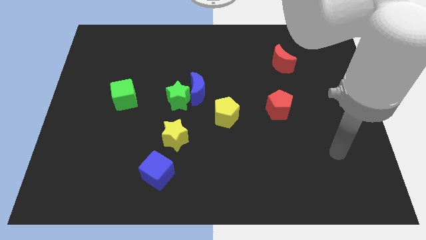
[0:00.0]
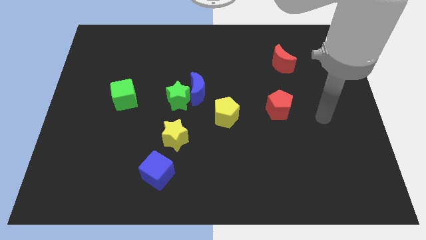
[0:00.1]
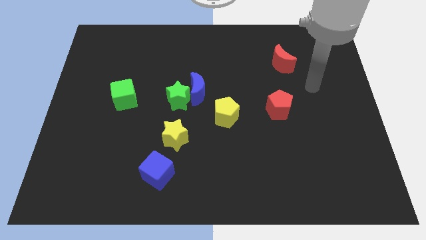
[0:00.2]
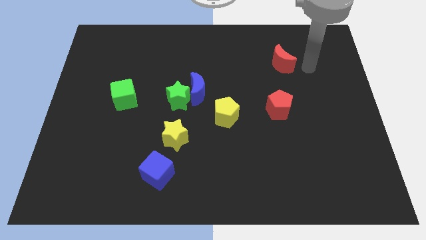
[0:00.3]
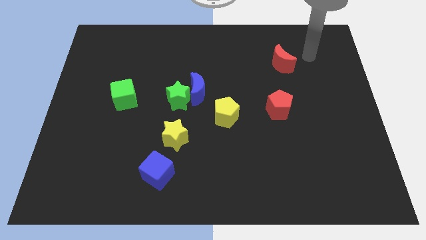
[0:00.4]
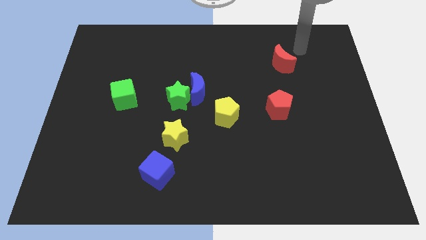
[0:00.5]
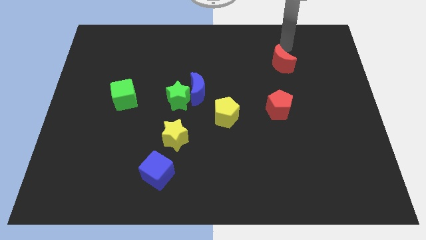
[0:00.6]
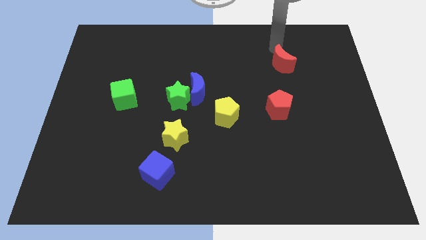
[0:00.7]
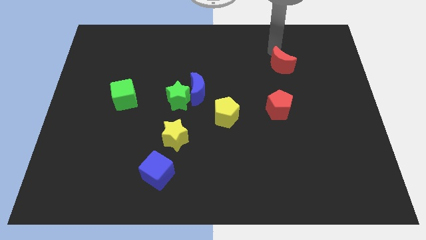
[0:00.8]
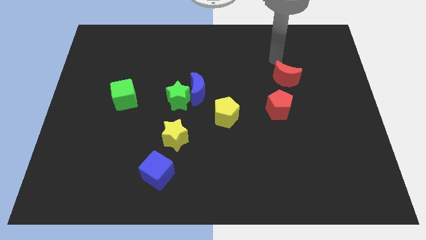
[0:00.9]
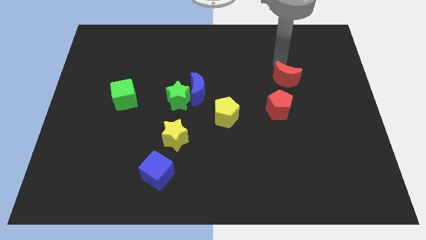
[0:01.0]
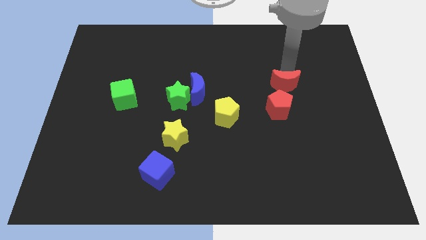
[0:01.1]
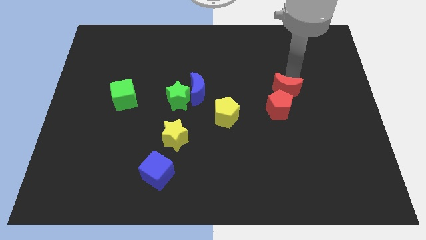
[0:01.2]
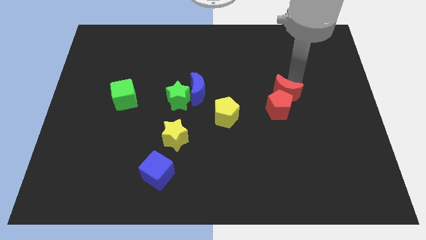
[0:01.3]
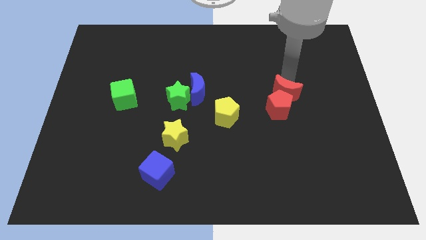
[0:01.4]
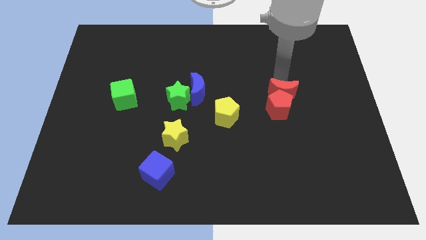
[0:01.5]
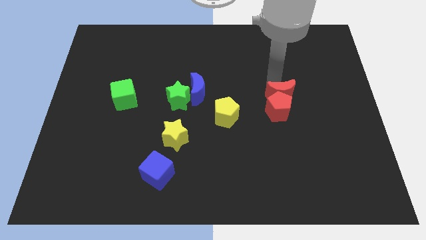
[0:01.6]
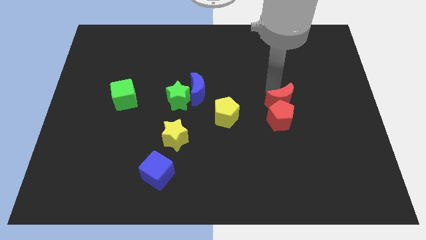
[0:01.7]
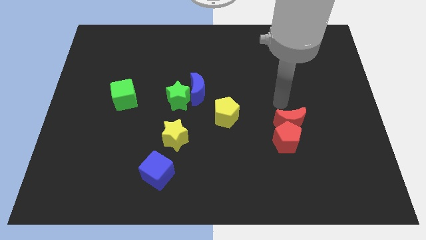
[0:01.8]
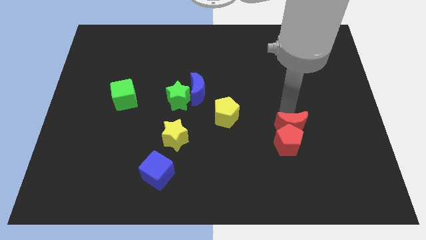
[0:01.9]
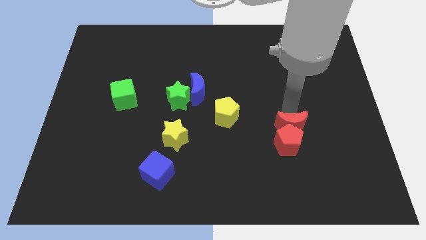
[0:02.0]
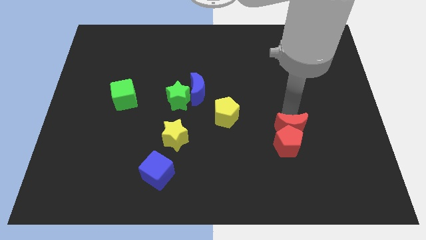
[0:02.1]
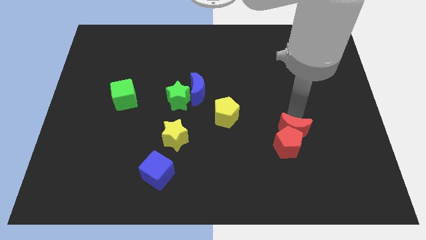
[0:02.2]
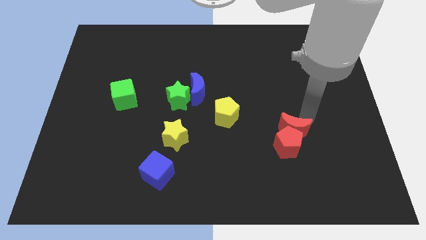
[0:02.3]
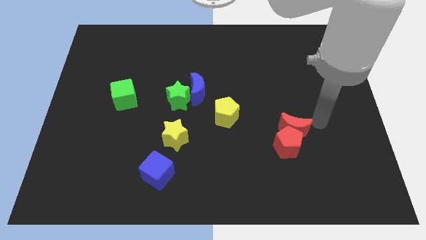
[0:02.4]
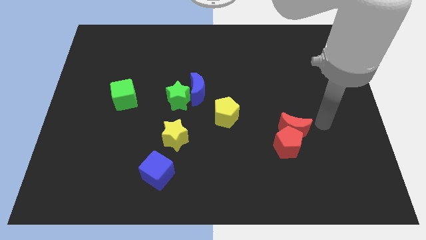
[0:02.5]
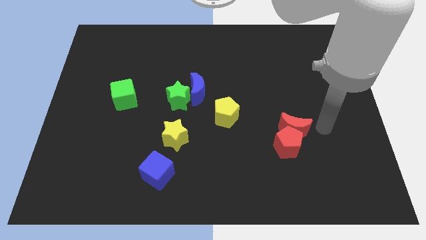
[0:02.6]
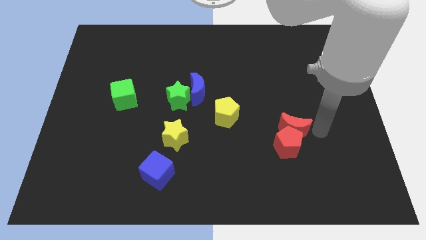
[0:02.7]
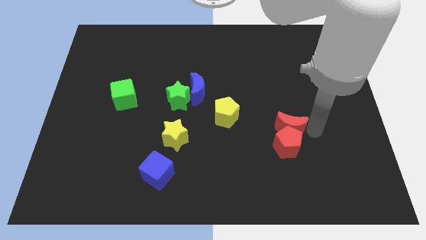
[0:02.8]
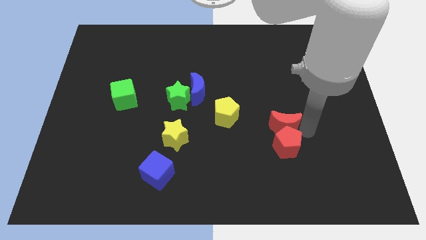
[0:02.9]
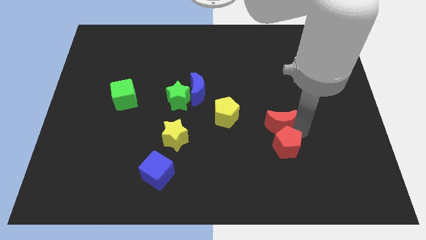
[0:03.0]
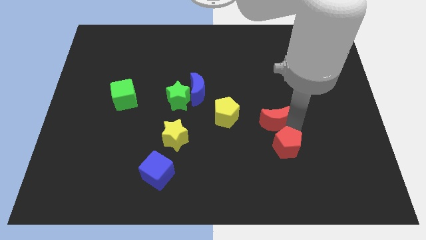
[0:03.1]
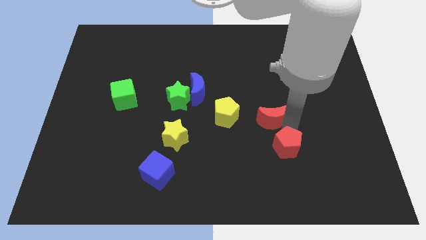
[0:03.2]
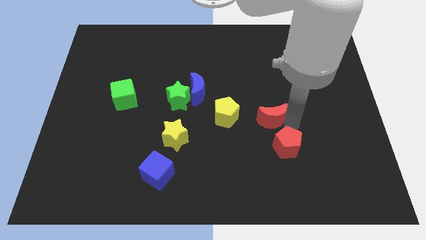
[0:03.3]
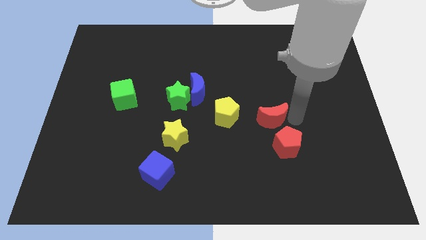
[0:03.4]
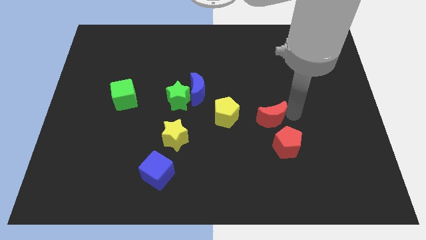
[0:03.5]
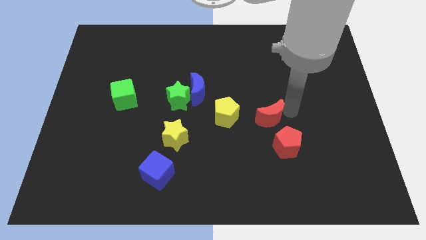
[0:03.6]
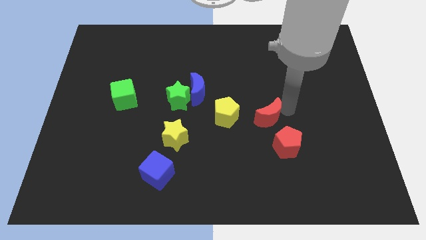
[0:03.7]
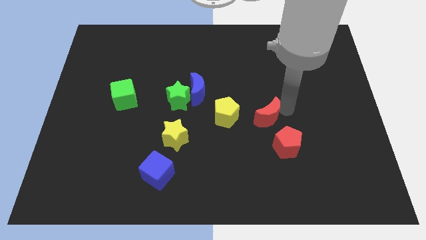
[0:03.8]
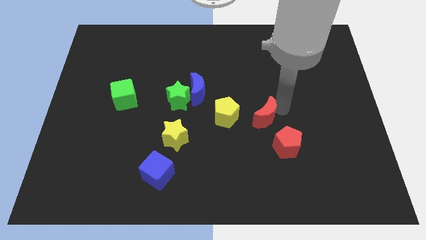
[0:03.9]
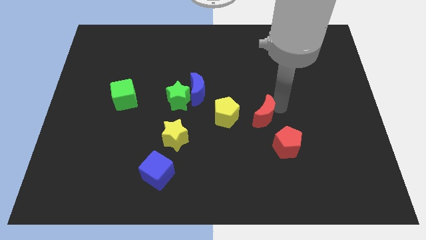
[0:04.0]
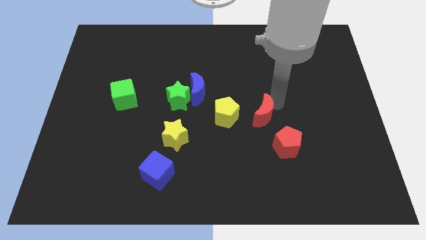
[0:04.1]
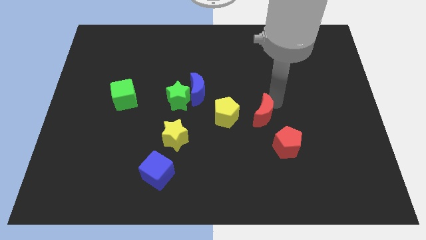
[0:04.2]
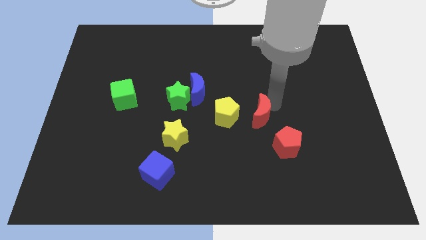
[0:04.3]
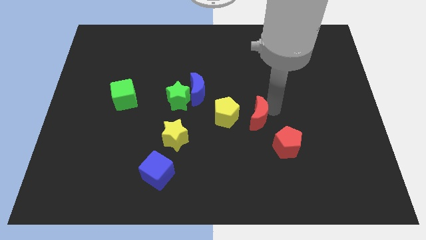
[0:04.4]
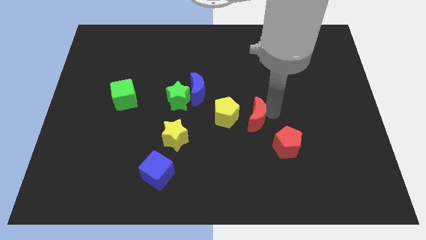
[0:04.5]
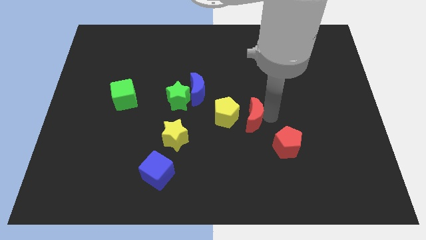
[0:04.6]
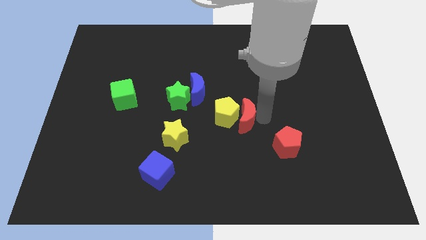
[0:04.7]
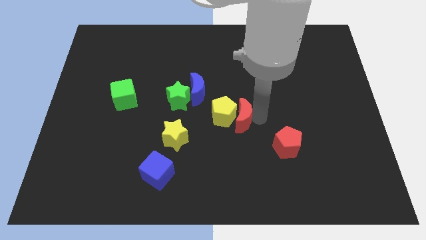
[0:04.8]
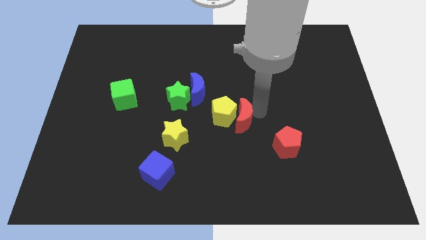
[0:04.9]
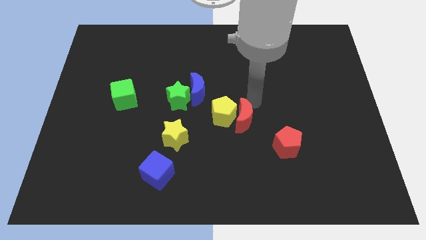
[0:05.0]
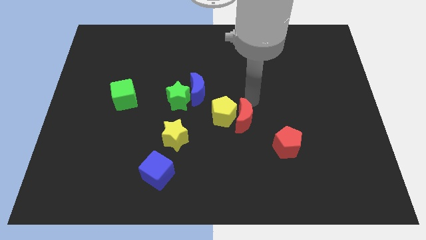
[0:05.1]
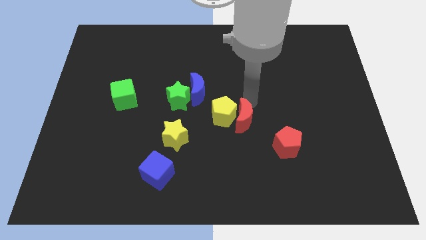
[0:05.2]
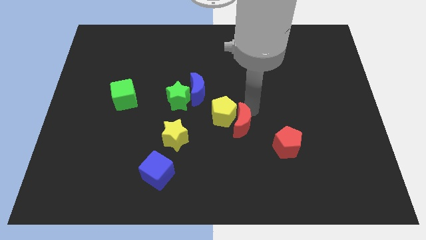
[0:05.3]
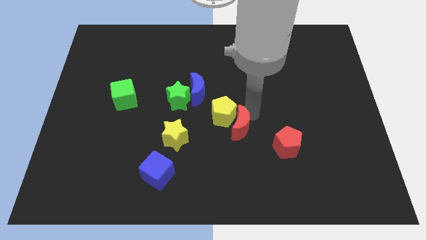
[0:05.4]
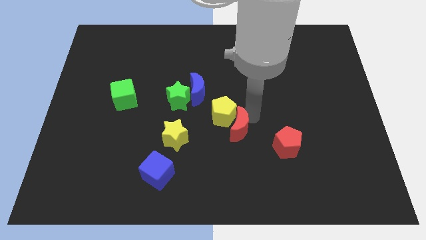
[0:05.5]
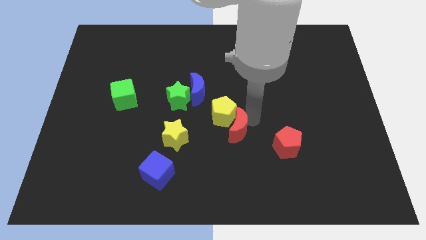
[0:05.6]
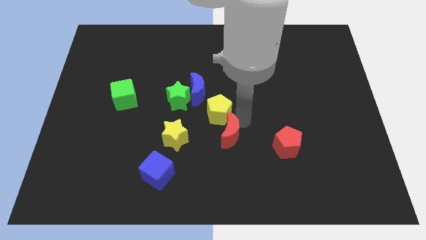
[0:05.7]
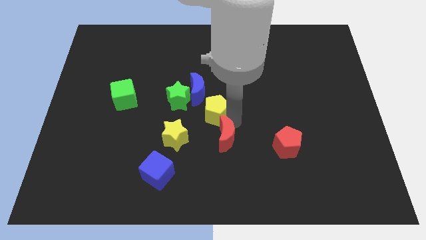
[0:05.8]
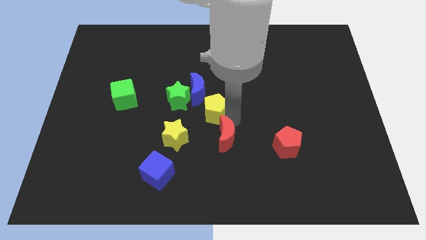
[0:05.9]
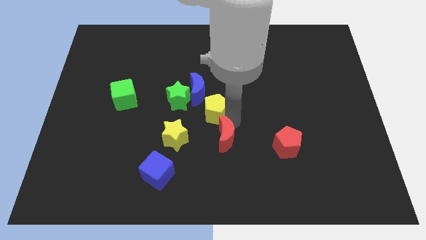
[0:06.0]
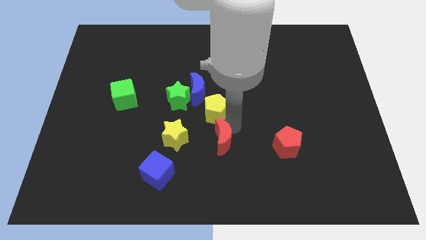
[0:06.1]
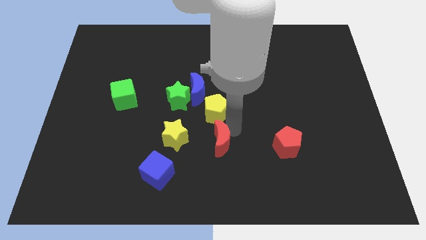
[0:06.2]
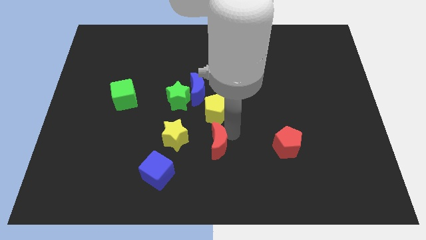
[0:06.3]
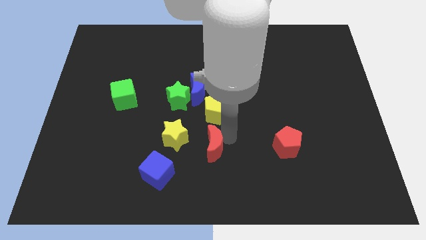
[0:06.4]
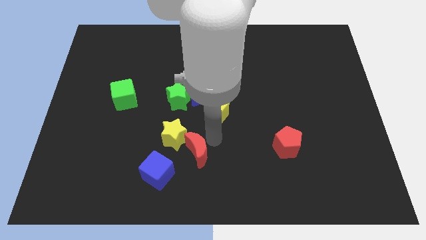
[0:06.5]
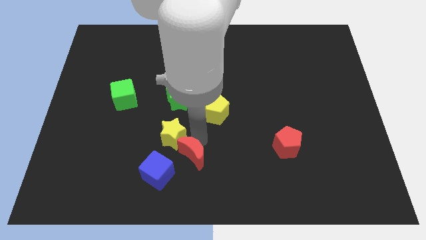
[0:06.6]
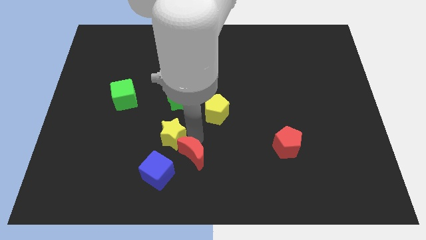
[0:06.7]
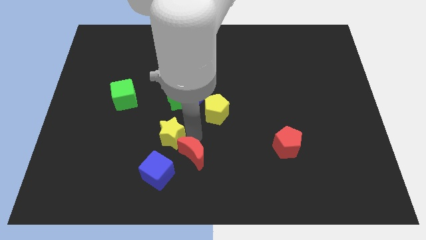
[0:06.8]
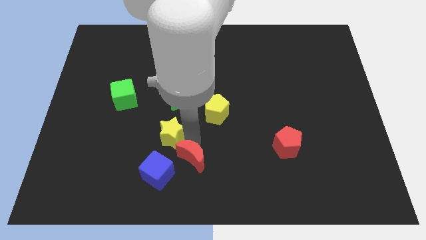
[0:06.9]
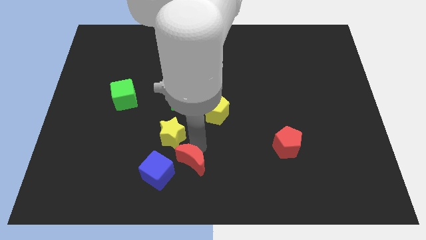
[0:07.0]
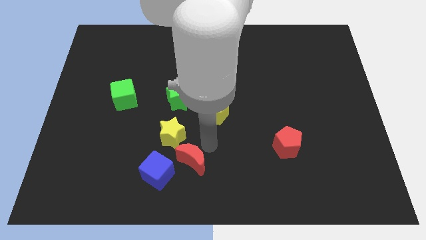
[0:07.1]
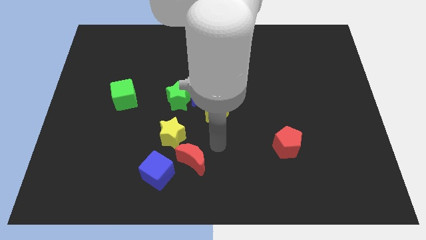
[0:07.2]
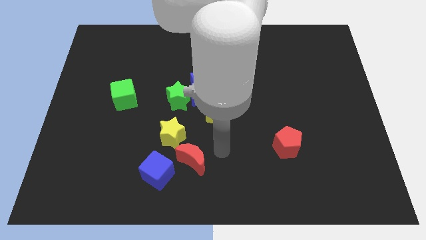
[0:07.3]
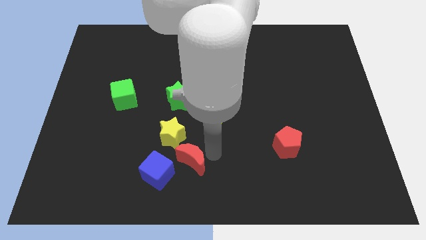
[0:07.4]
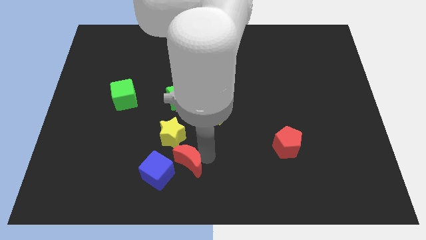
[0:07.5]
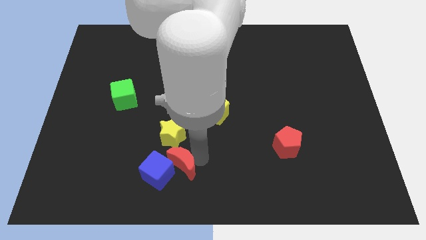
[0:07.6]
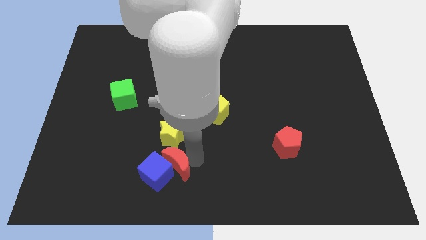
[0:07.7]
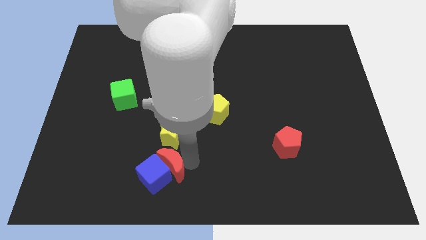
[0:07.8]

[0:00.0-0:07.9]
put the red moon close to the blue cube

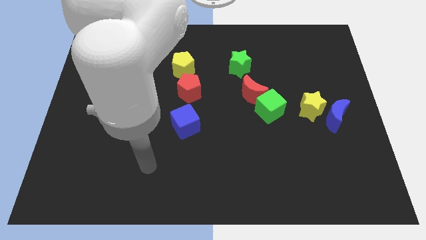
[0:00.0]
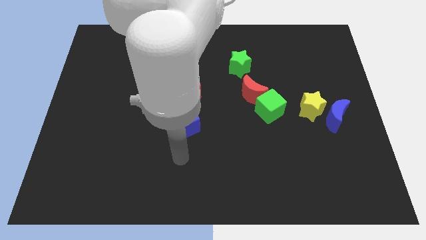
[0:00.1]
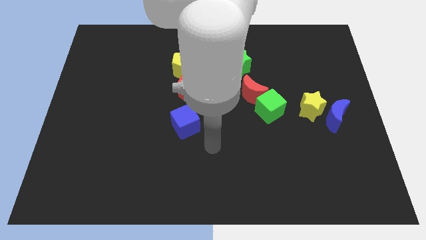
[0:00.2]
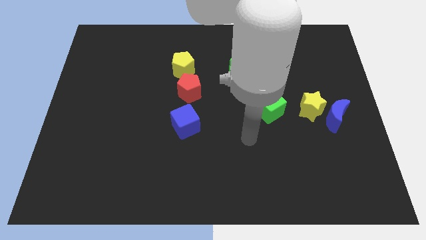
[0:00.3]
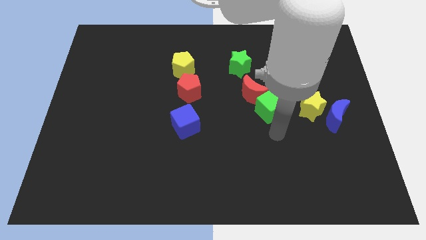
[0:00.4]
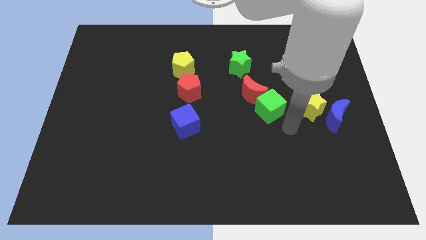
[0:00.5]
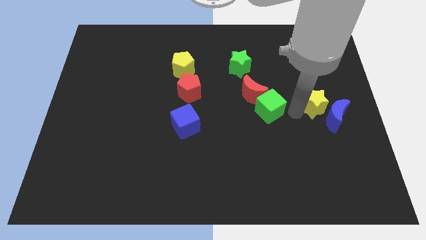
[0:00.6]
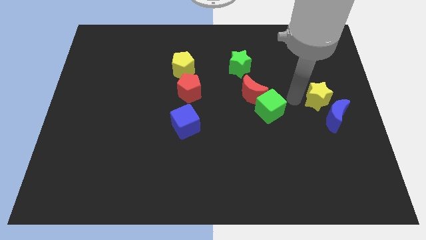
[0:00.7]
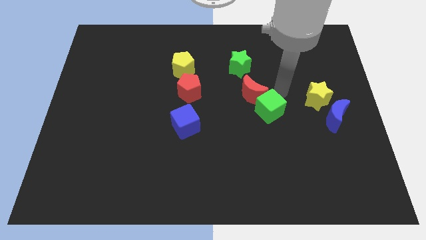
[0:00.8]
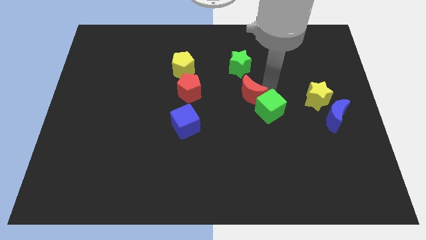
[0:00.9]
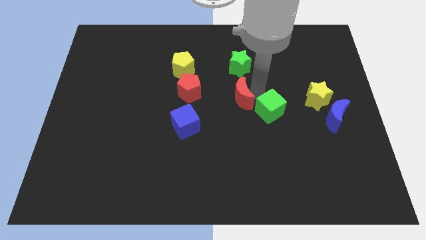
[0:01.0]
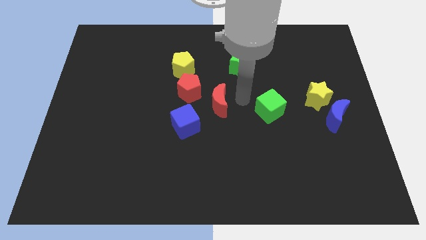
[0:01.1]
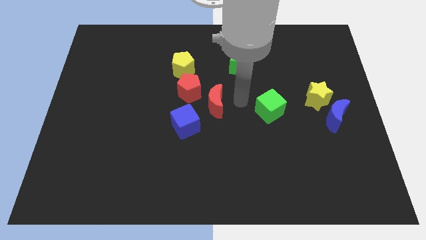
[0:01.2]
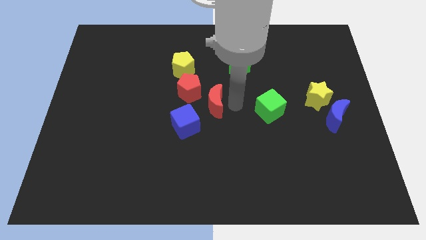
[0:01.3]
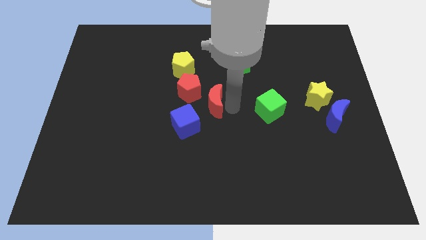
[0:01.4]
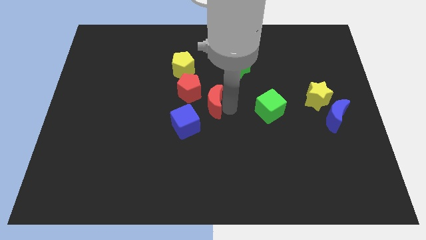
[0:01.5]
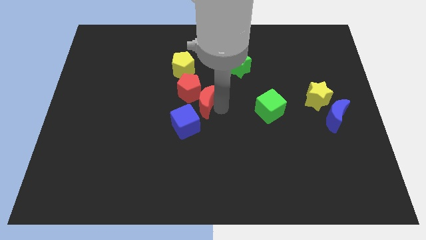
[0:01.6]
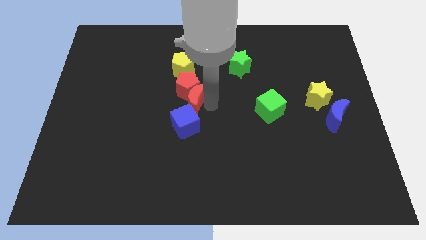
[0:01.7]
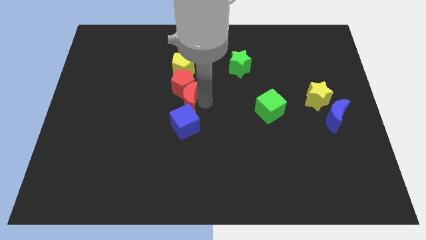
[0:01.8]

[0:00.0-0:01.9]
push the red moon towards the red pentagon
